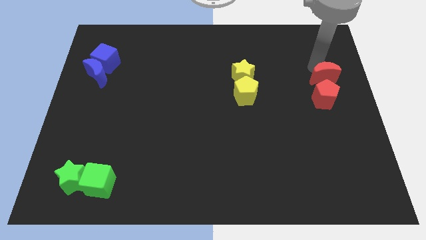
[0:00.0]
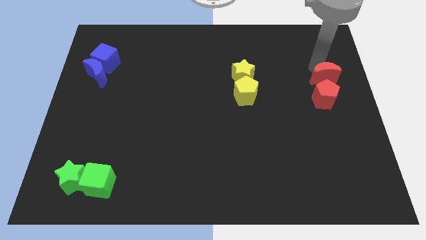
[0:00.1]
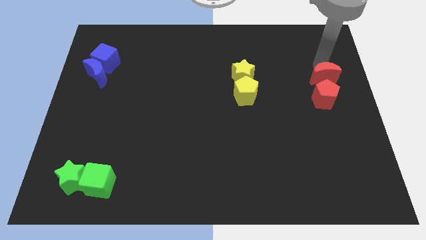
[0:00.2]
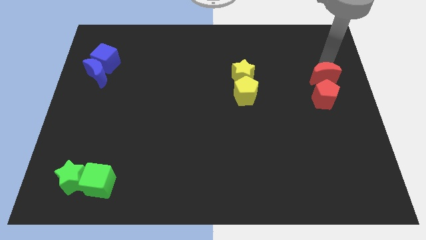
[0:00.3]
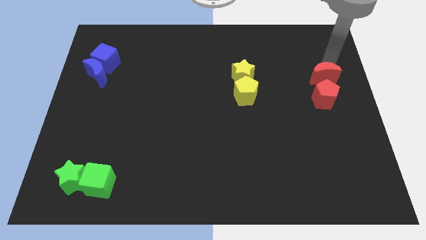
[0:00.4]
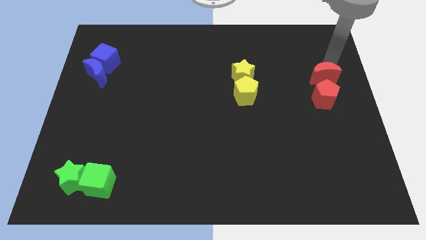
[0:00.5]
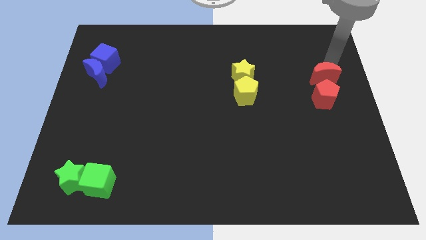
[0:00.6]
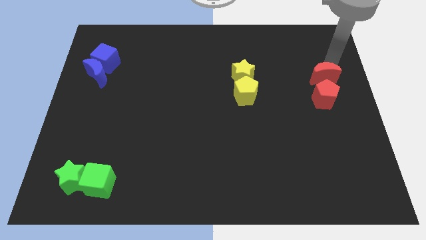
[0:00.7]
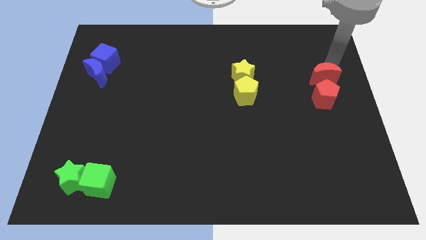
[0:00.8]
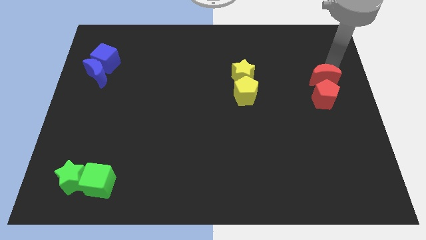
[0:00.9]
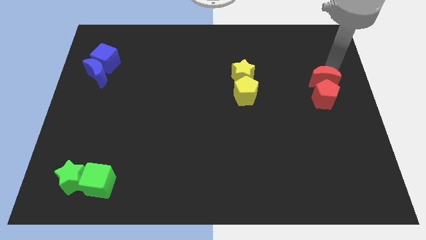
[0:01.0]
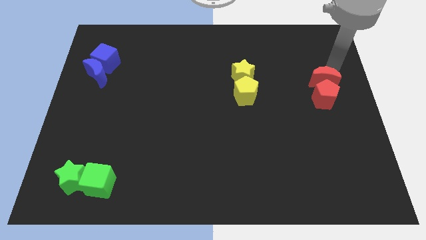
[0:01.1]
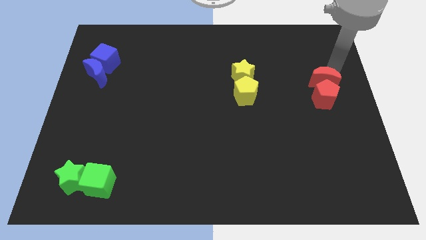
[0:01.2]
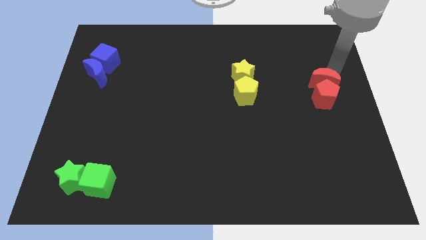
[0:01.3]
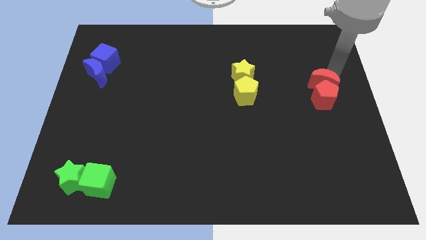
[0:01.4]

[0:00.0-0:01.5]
push the red moon into the red pentagon

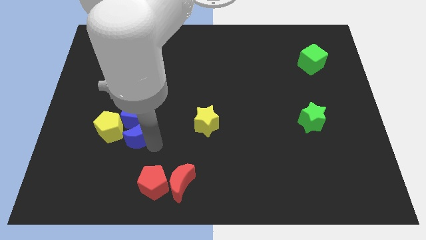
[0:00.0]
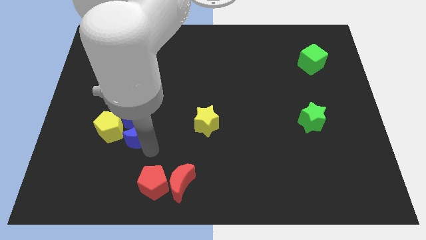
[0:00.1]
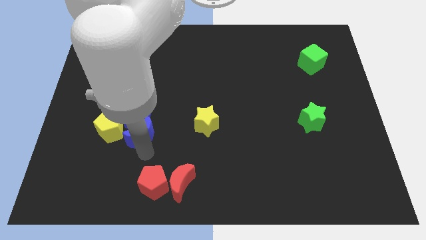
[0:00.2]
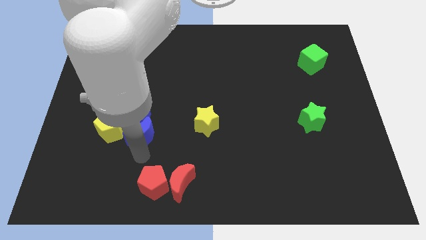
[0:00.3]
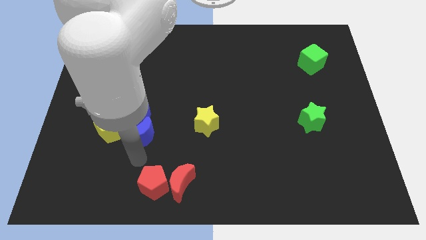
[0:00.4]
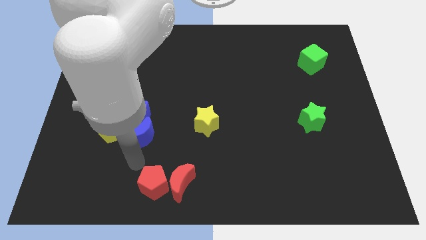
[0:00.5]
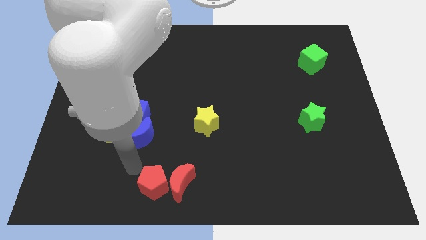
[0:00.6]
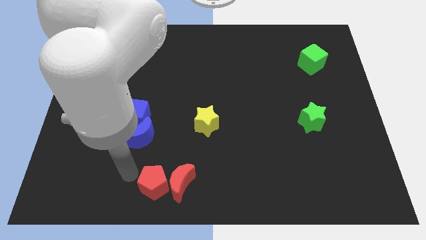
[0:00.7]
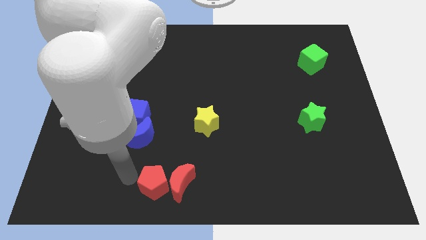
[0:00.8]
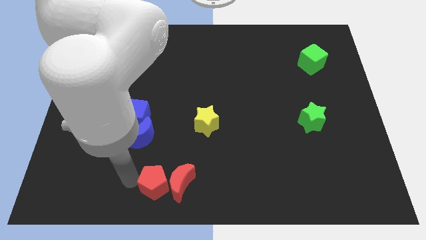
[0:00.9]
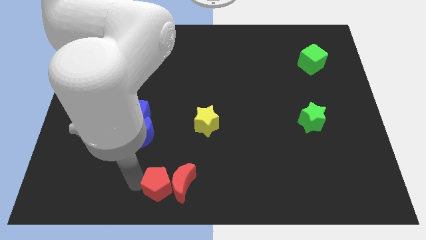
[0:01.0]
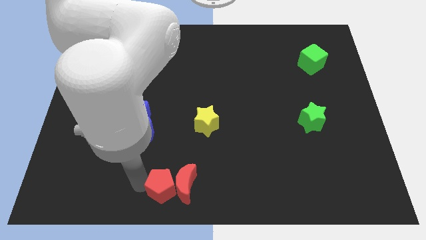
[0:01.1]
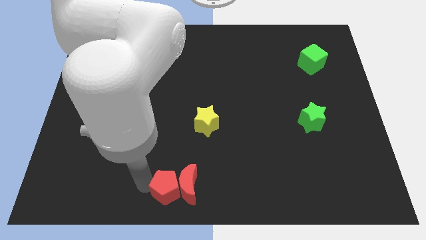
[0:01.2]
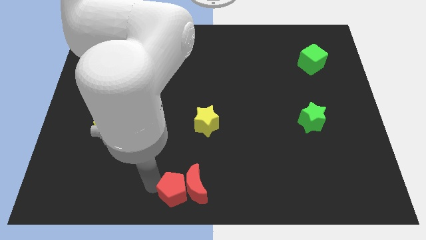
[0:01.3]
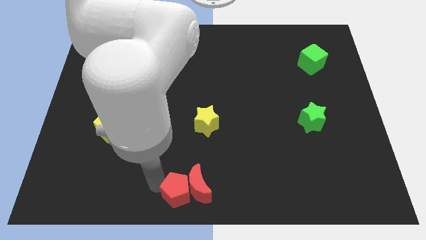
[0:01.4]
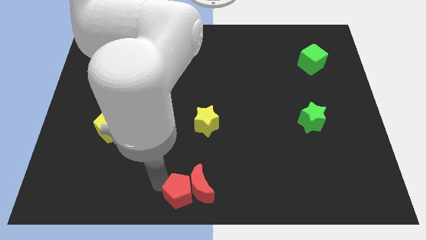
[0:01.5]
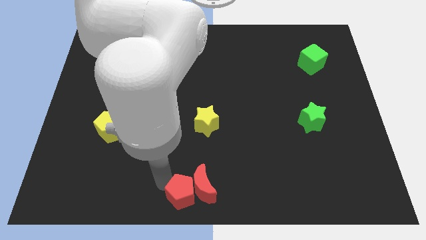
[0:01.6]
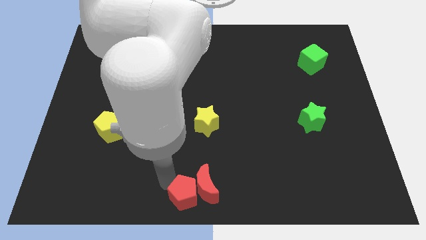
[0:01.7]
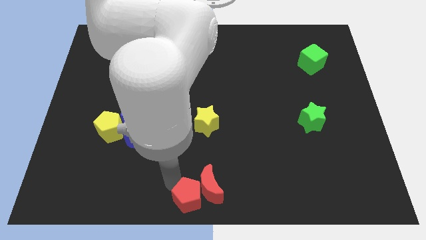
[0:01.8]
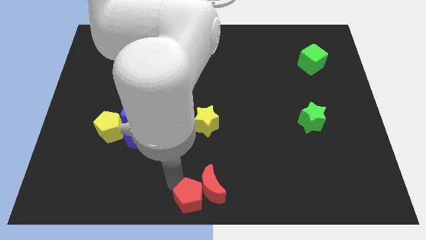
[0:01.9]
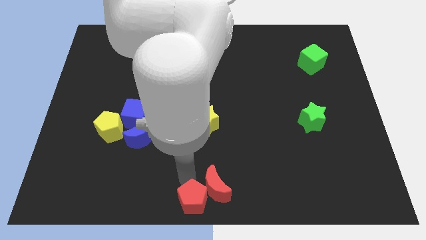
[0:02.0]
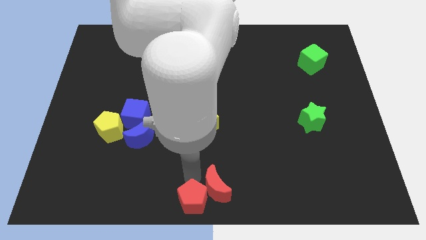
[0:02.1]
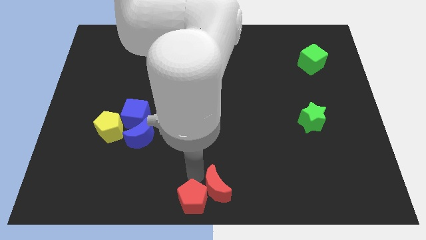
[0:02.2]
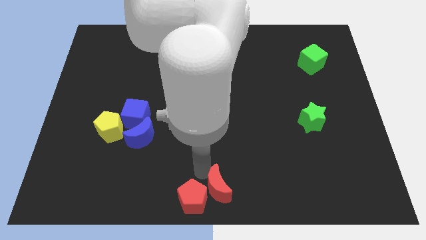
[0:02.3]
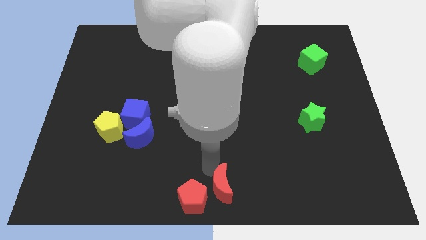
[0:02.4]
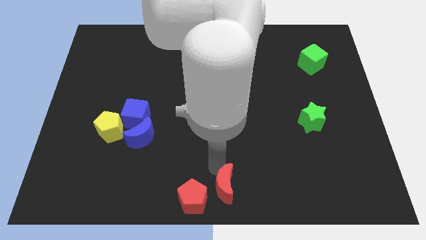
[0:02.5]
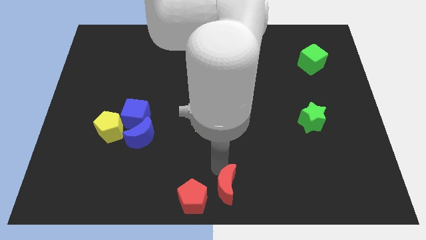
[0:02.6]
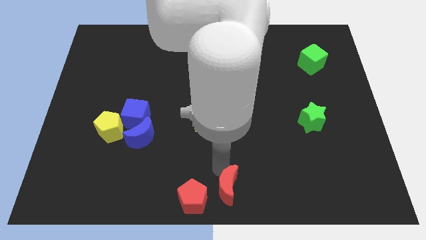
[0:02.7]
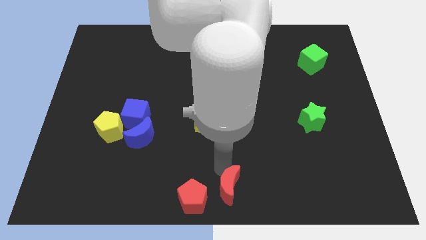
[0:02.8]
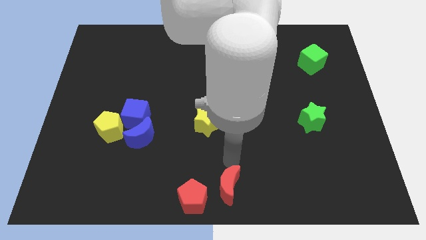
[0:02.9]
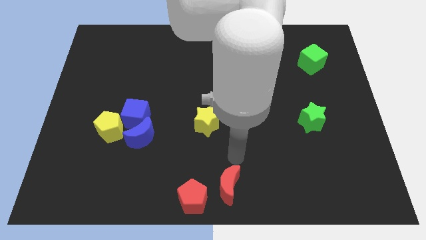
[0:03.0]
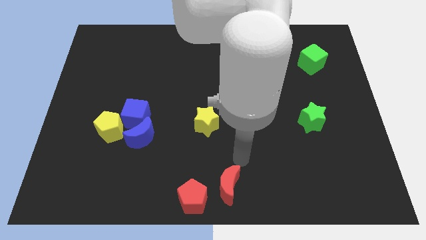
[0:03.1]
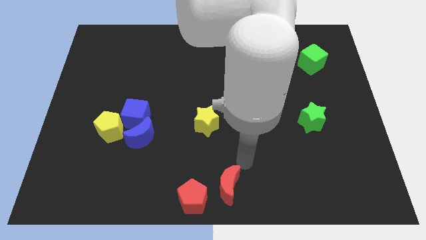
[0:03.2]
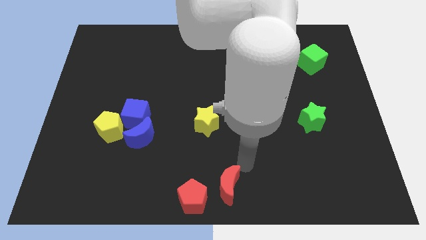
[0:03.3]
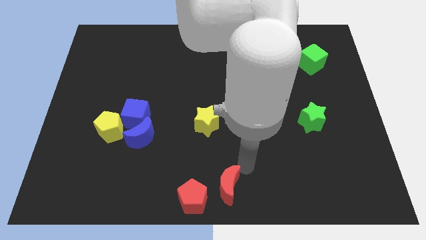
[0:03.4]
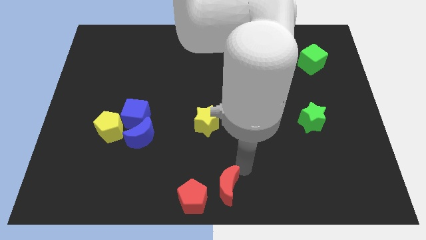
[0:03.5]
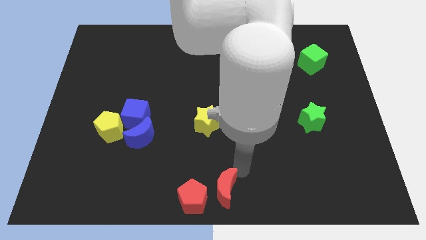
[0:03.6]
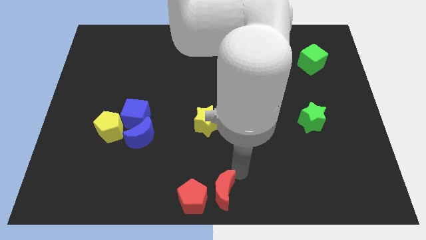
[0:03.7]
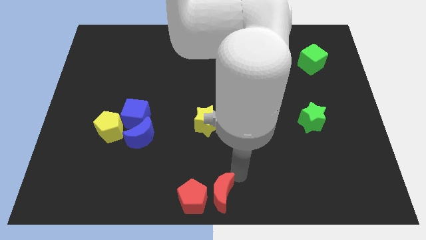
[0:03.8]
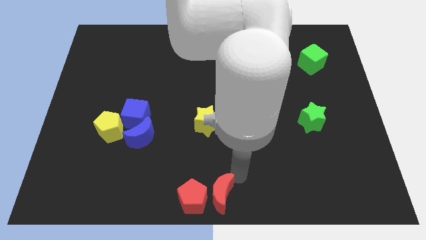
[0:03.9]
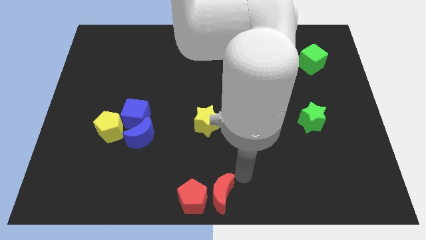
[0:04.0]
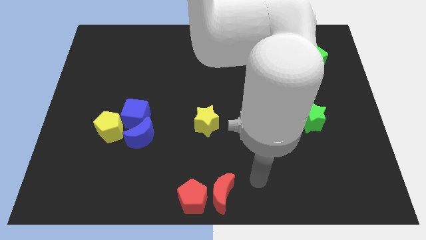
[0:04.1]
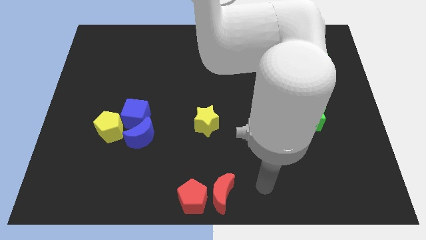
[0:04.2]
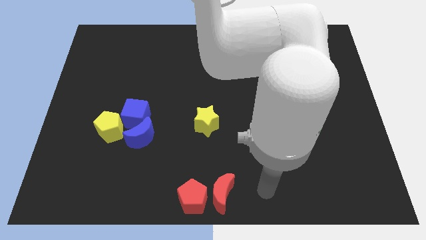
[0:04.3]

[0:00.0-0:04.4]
push the red crescent to the right of the red pentagon

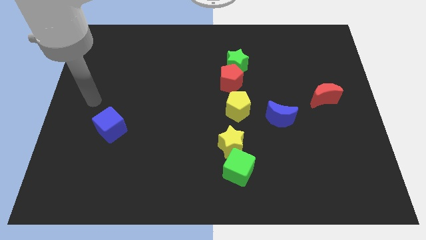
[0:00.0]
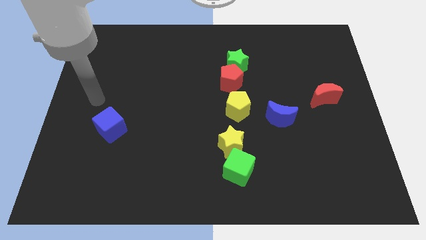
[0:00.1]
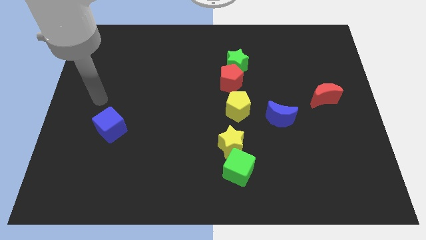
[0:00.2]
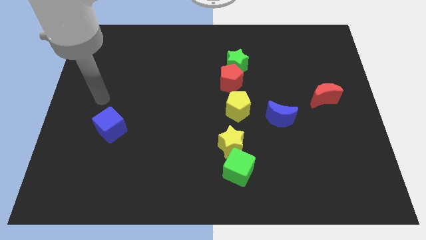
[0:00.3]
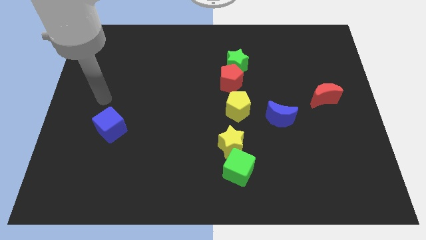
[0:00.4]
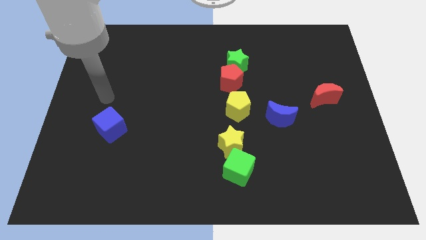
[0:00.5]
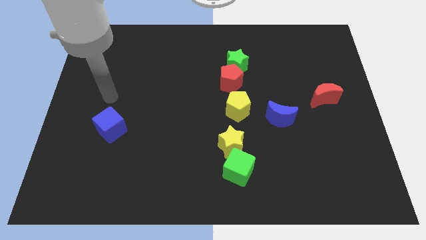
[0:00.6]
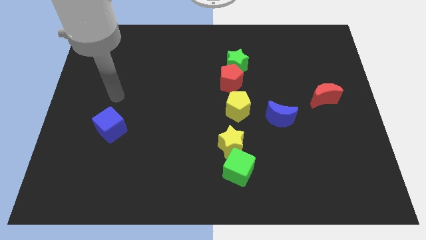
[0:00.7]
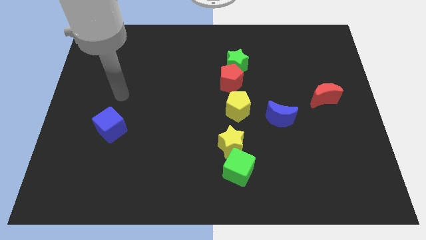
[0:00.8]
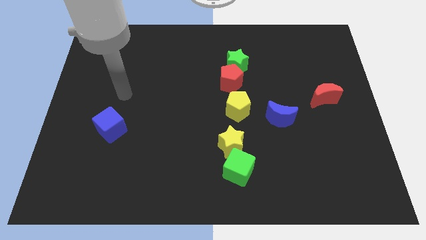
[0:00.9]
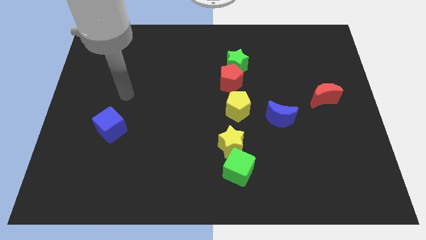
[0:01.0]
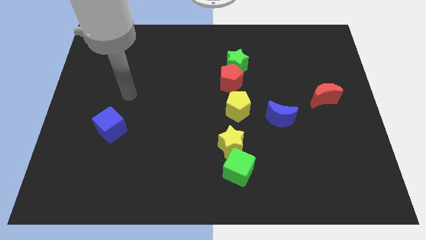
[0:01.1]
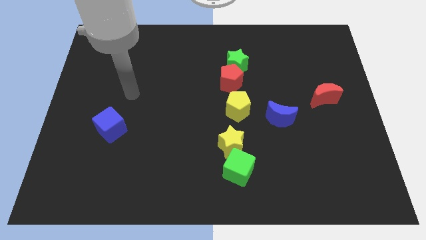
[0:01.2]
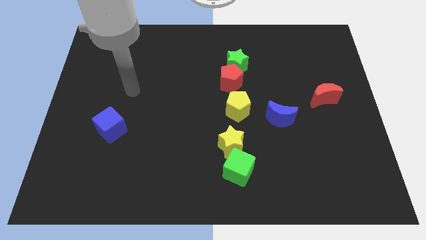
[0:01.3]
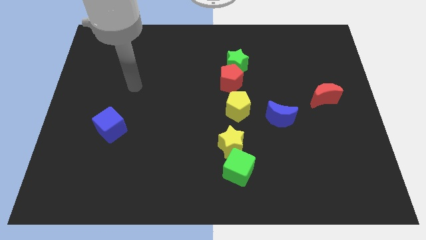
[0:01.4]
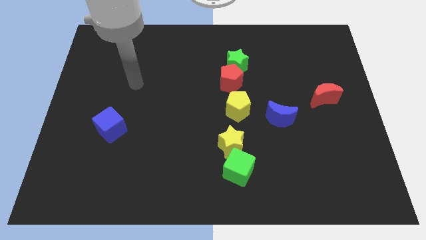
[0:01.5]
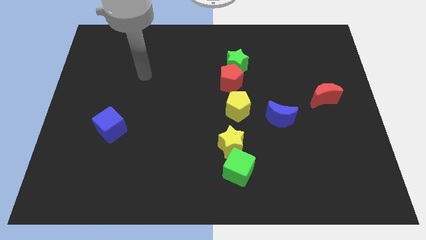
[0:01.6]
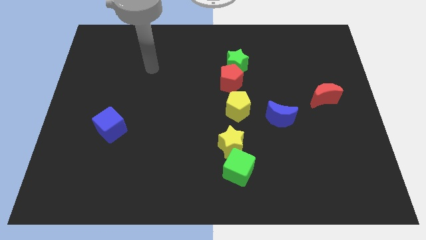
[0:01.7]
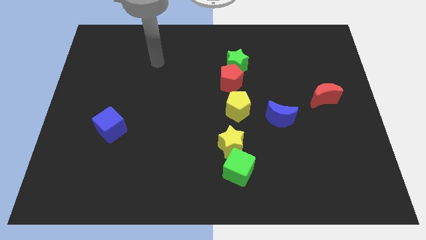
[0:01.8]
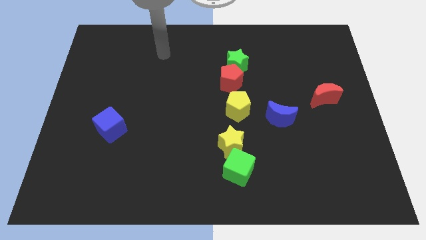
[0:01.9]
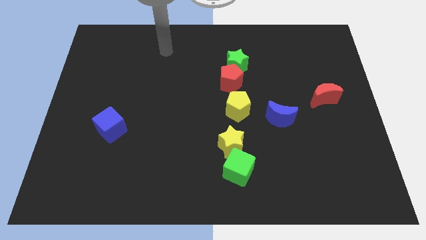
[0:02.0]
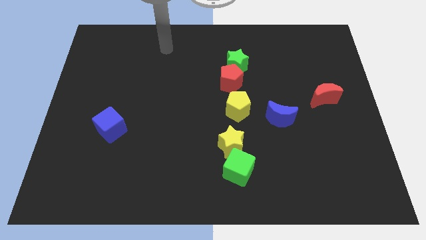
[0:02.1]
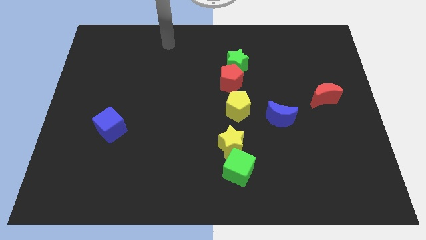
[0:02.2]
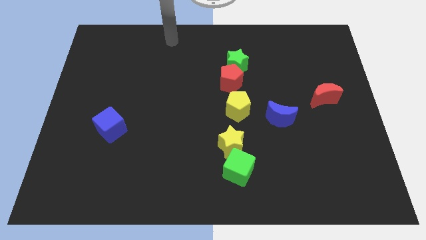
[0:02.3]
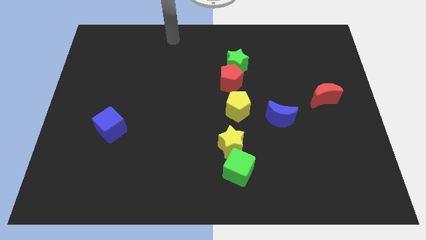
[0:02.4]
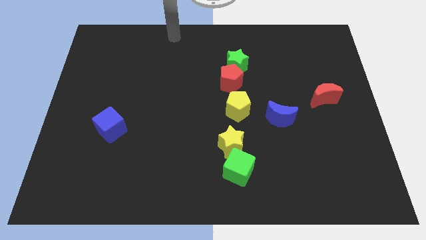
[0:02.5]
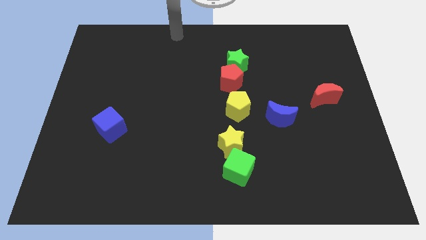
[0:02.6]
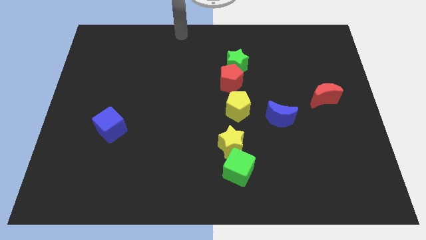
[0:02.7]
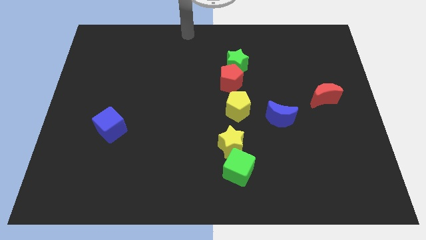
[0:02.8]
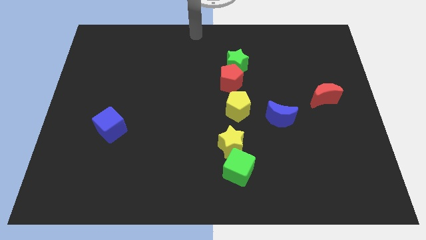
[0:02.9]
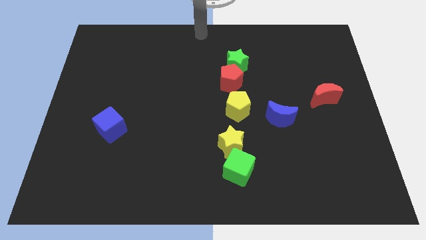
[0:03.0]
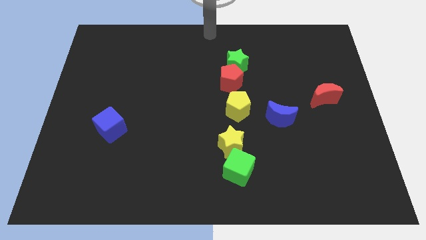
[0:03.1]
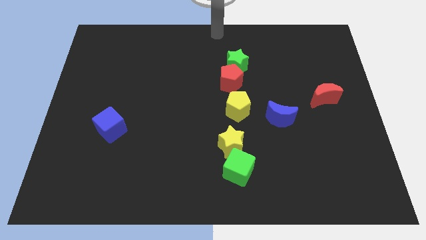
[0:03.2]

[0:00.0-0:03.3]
point your arm at the top center of the board
